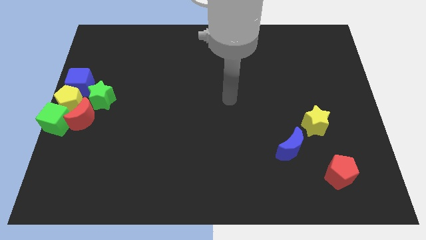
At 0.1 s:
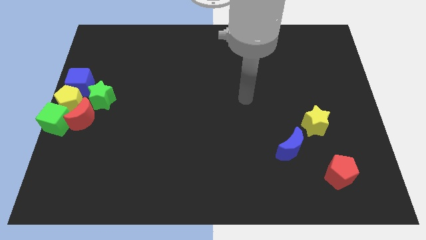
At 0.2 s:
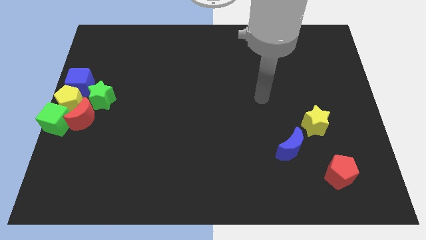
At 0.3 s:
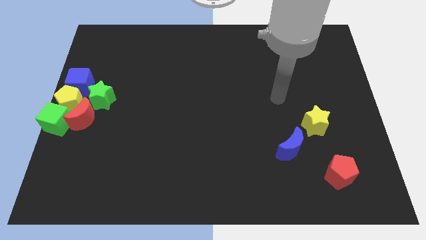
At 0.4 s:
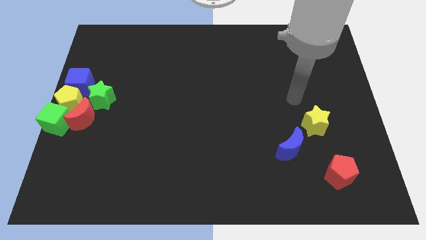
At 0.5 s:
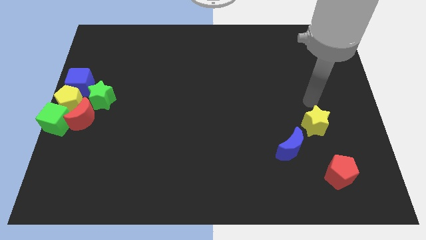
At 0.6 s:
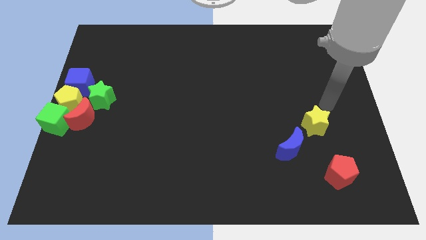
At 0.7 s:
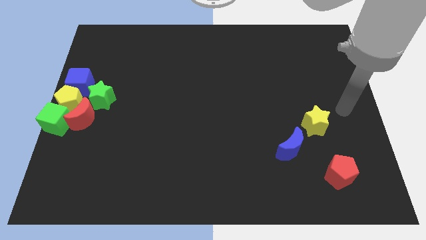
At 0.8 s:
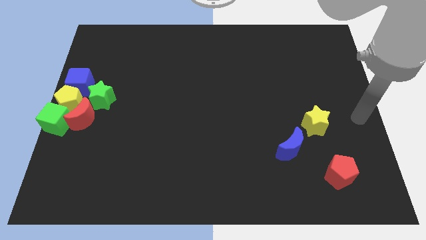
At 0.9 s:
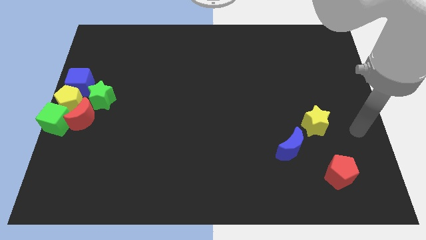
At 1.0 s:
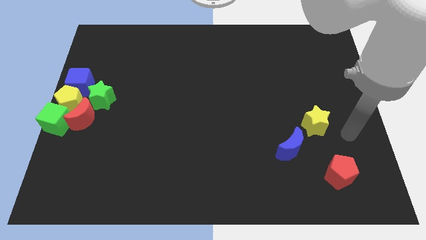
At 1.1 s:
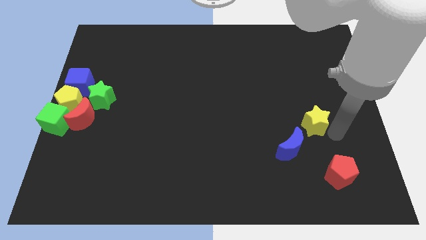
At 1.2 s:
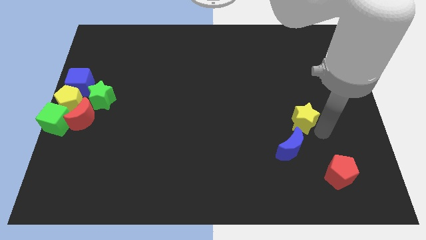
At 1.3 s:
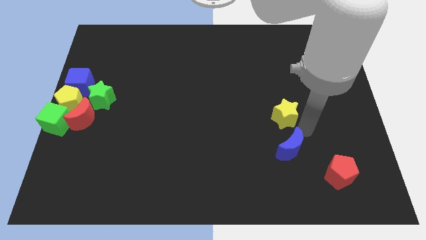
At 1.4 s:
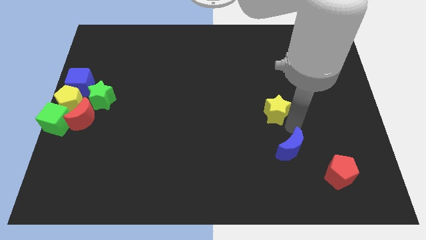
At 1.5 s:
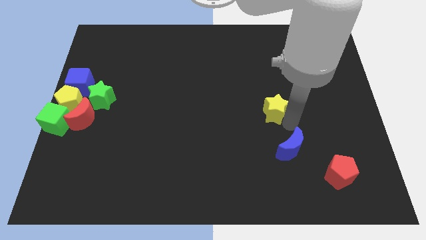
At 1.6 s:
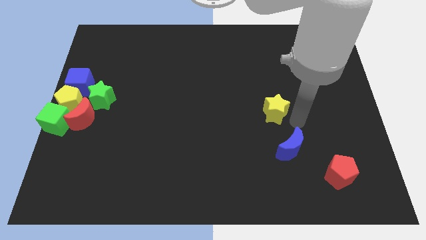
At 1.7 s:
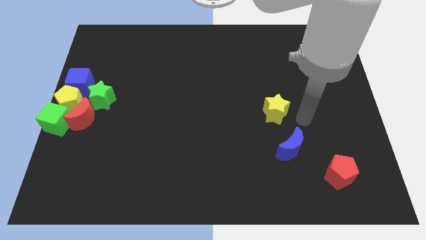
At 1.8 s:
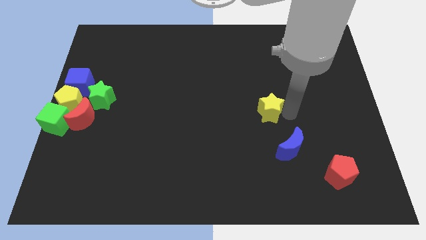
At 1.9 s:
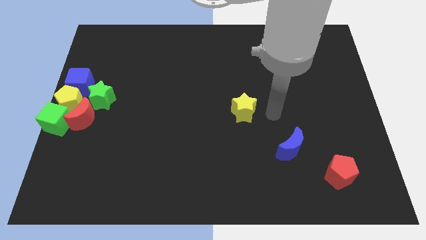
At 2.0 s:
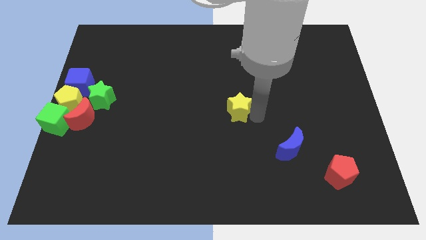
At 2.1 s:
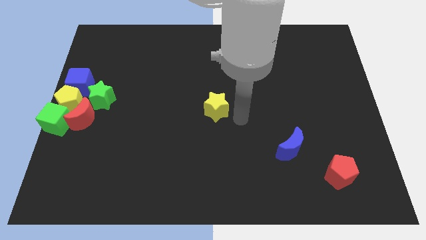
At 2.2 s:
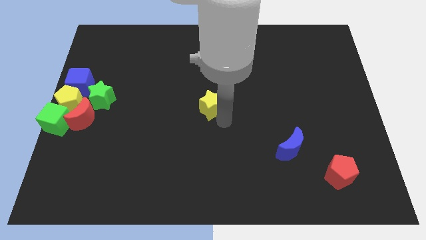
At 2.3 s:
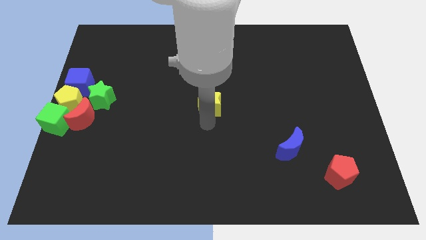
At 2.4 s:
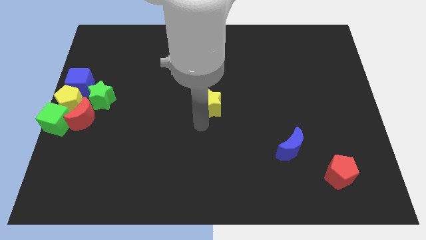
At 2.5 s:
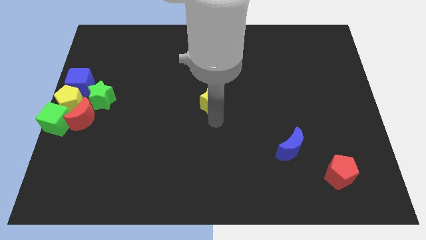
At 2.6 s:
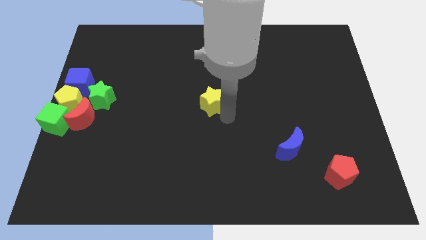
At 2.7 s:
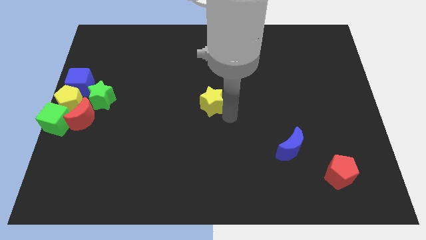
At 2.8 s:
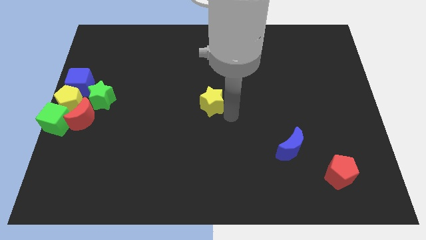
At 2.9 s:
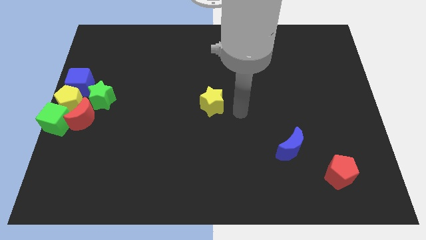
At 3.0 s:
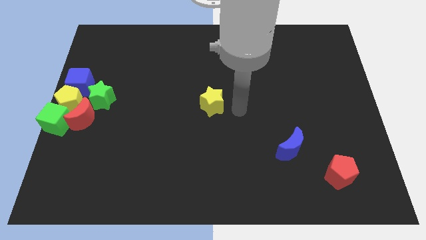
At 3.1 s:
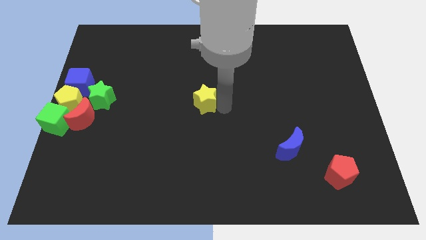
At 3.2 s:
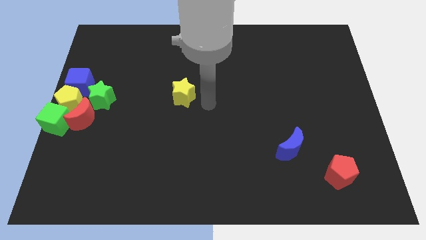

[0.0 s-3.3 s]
place yellow star at center

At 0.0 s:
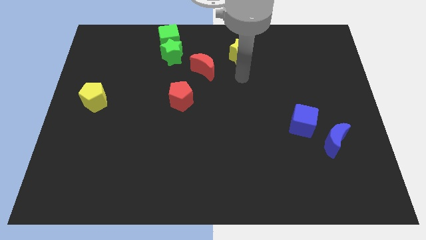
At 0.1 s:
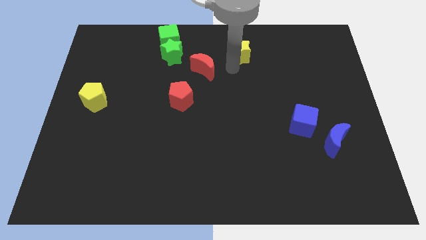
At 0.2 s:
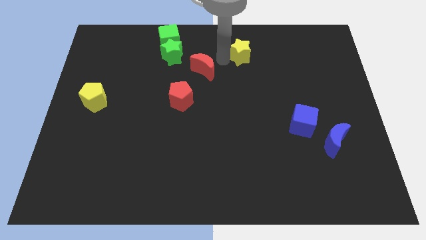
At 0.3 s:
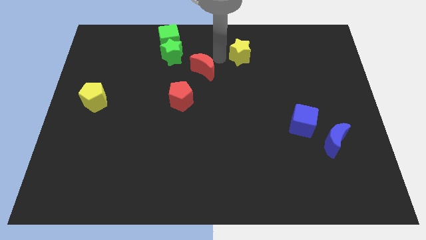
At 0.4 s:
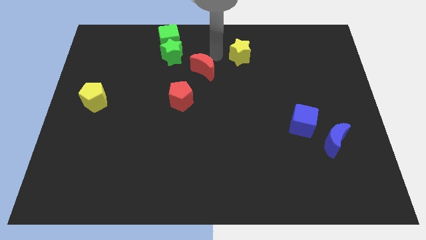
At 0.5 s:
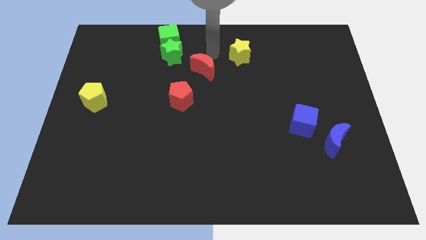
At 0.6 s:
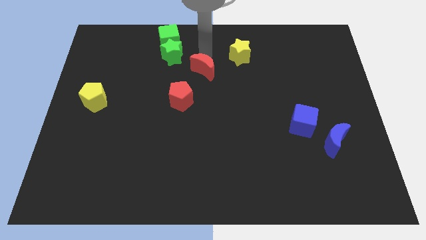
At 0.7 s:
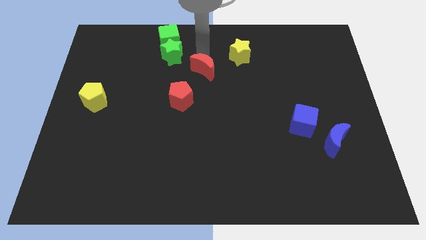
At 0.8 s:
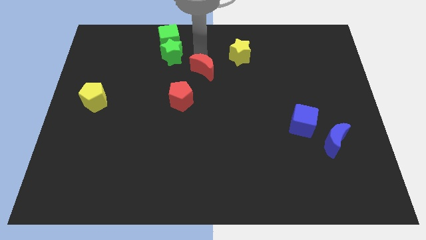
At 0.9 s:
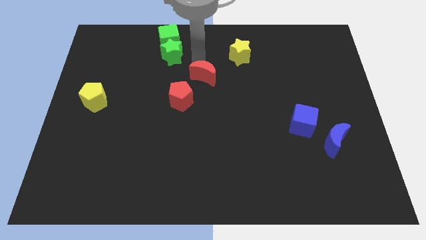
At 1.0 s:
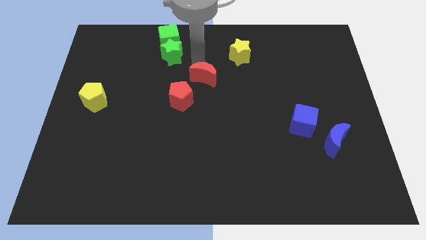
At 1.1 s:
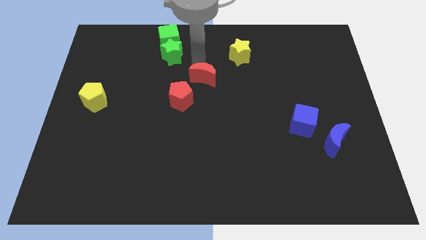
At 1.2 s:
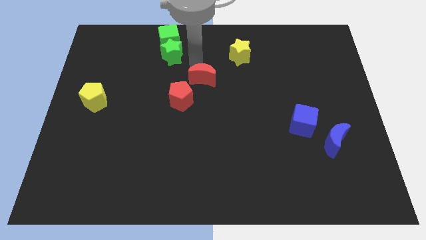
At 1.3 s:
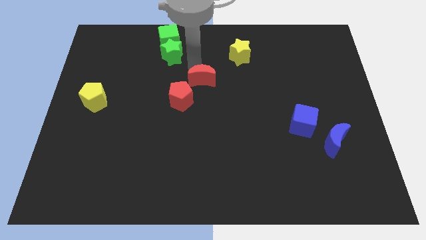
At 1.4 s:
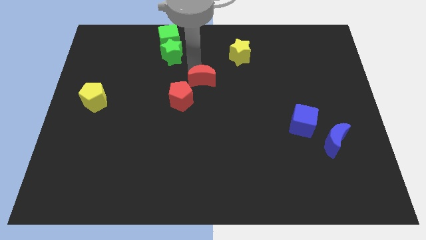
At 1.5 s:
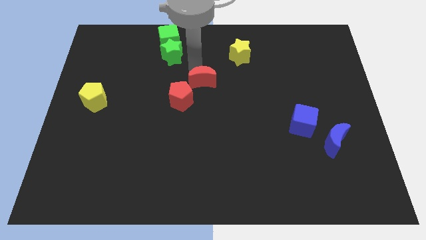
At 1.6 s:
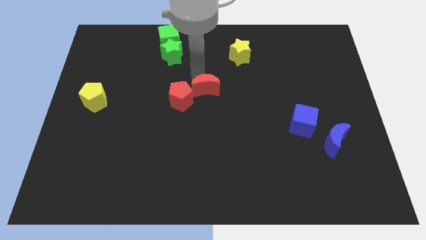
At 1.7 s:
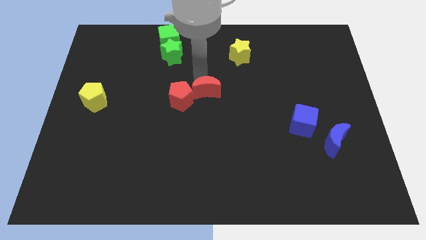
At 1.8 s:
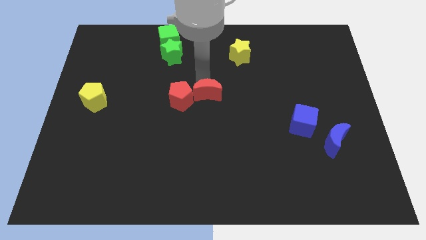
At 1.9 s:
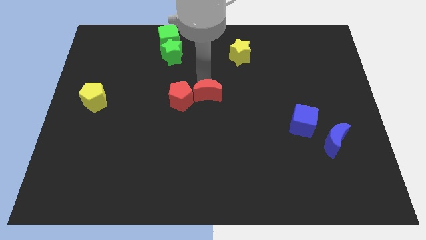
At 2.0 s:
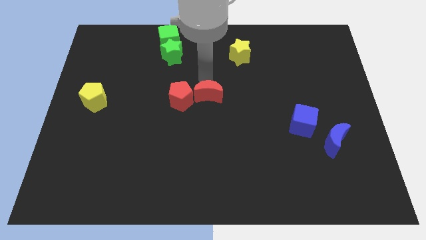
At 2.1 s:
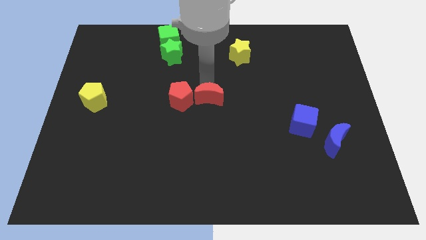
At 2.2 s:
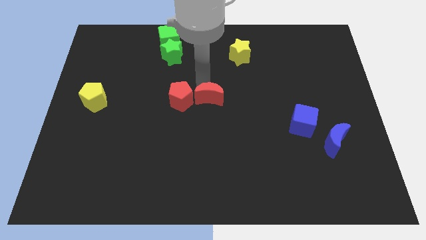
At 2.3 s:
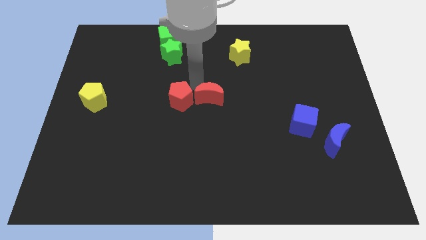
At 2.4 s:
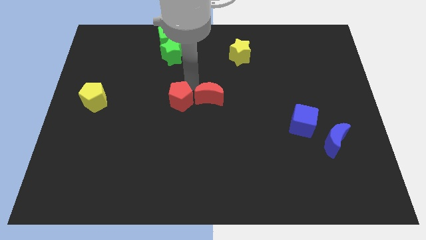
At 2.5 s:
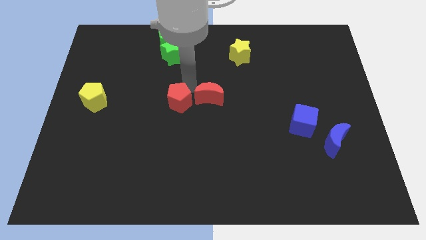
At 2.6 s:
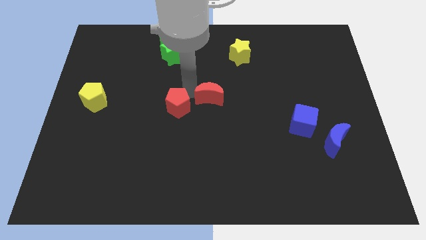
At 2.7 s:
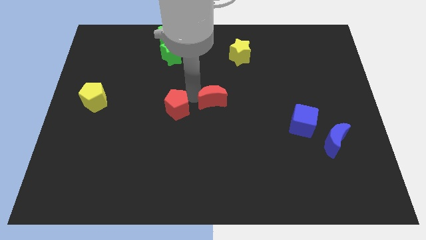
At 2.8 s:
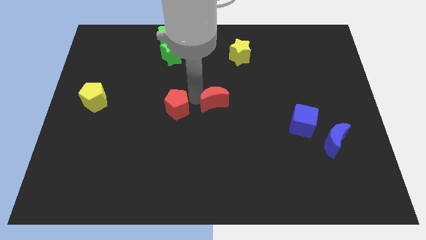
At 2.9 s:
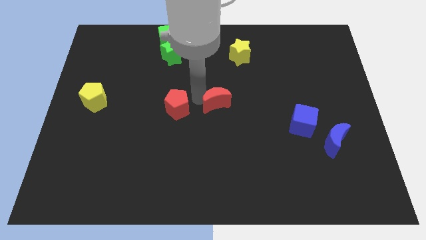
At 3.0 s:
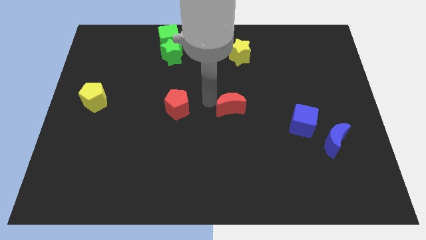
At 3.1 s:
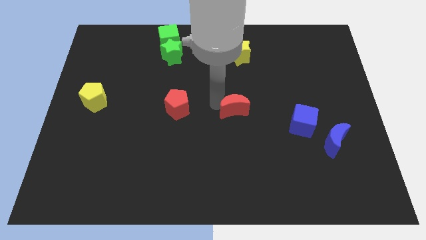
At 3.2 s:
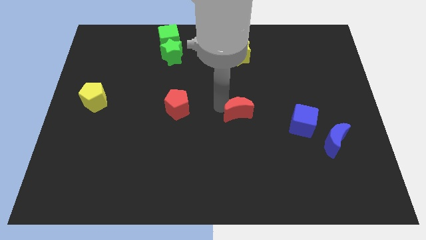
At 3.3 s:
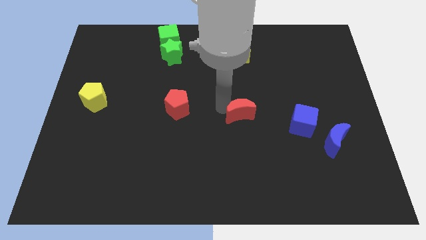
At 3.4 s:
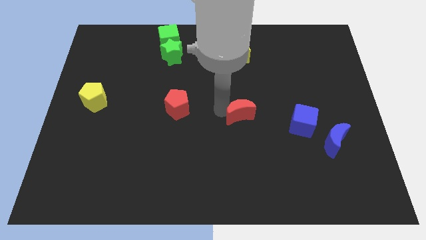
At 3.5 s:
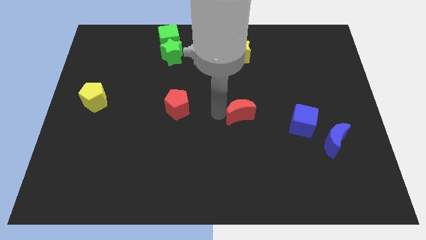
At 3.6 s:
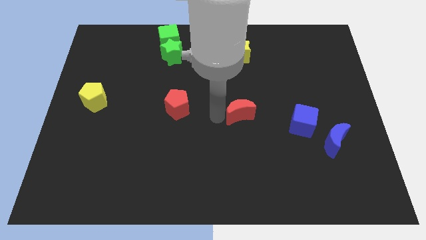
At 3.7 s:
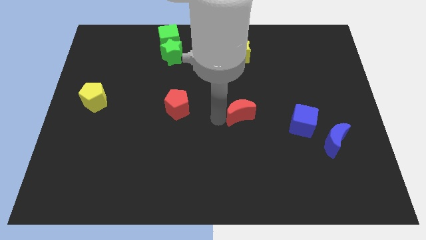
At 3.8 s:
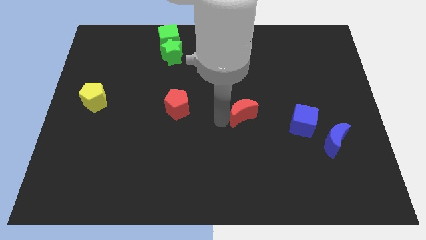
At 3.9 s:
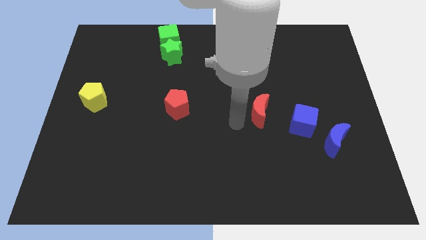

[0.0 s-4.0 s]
move the red crescent diagonally to the blue cube

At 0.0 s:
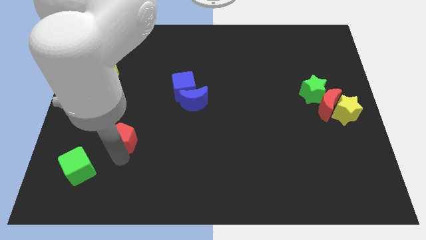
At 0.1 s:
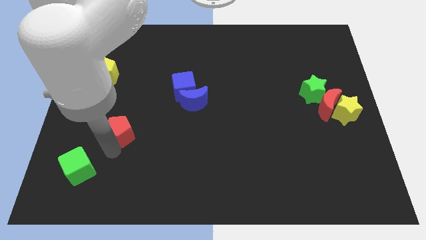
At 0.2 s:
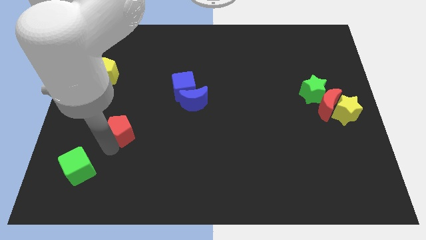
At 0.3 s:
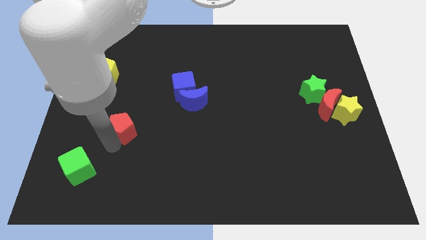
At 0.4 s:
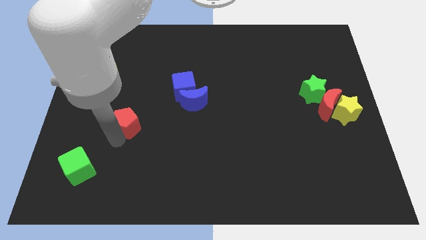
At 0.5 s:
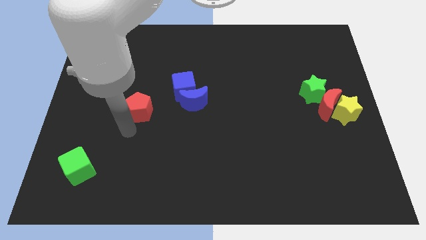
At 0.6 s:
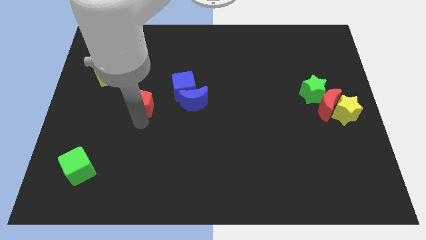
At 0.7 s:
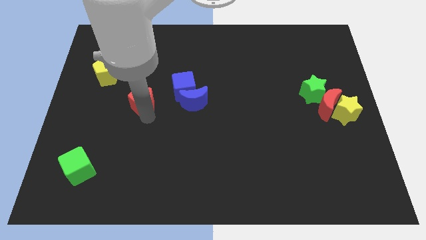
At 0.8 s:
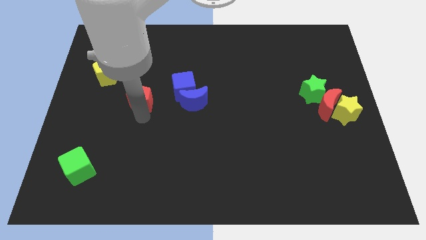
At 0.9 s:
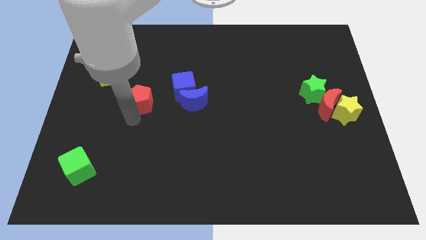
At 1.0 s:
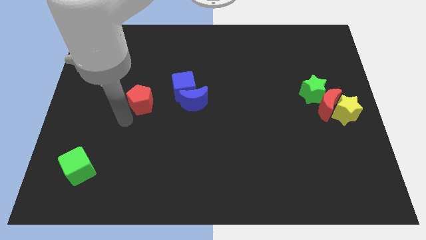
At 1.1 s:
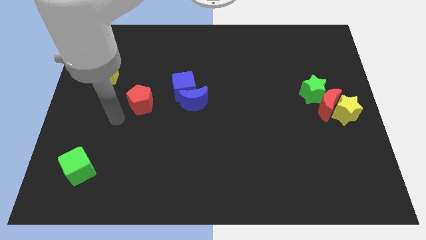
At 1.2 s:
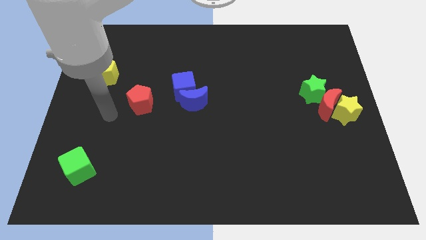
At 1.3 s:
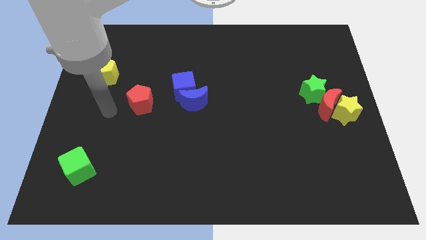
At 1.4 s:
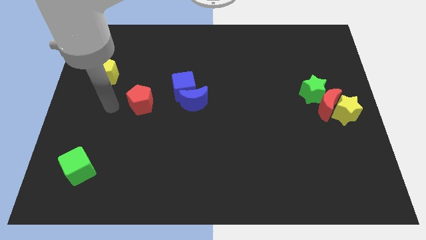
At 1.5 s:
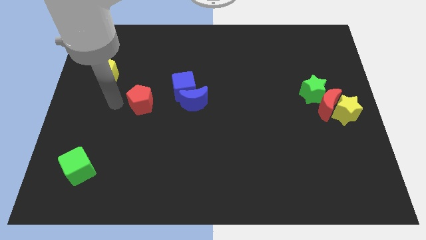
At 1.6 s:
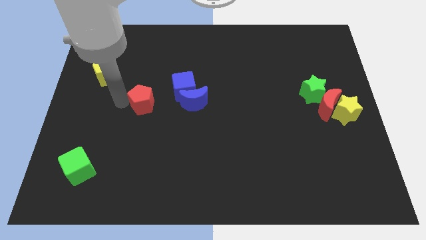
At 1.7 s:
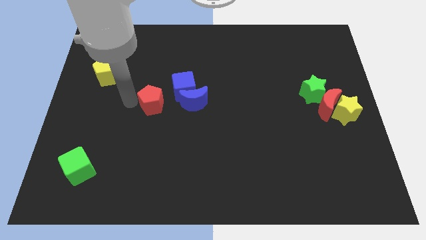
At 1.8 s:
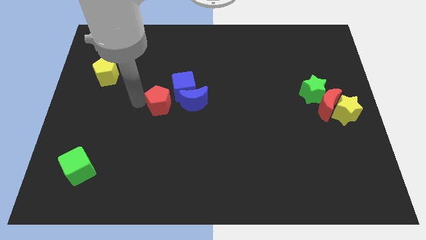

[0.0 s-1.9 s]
place yellow pentagon beside blue blocks
